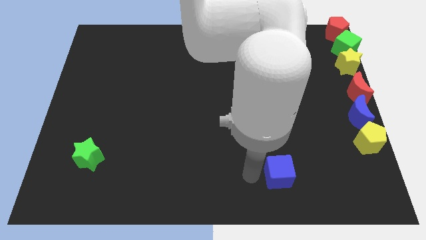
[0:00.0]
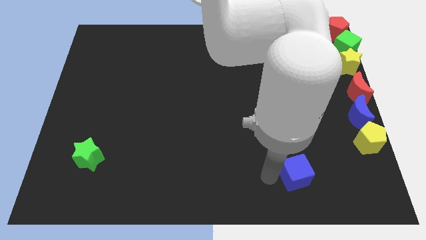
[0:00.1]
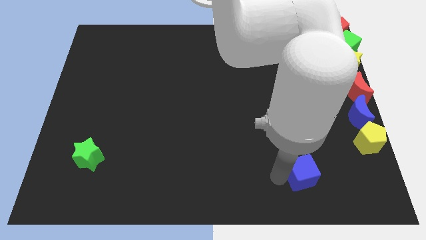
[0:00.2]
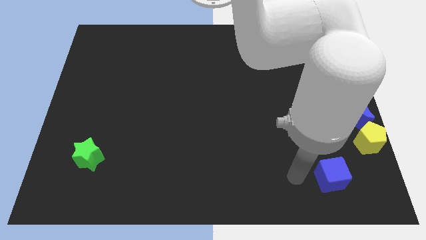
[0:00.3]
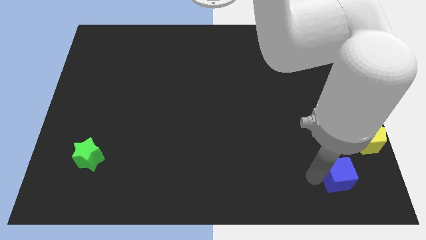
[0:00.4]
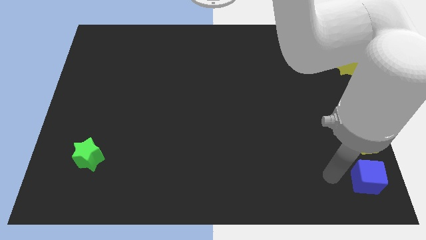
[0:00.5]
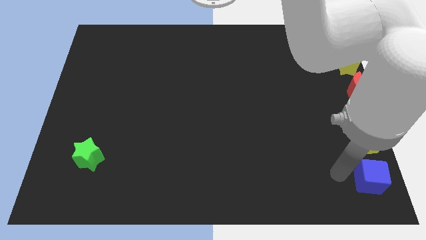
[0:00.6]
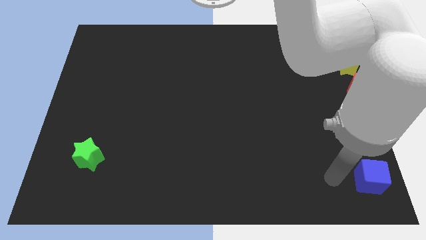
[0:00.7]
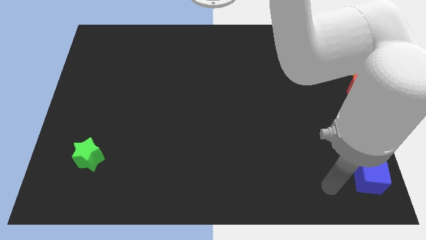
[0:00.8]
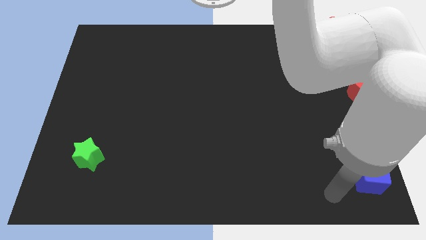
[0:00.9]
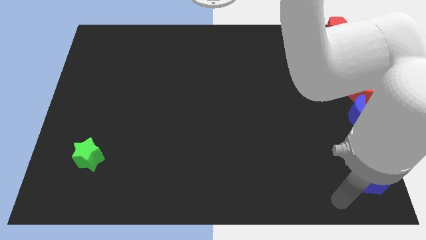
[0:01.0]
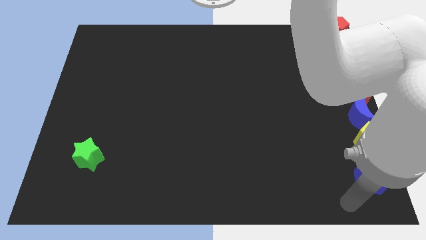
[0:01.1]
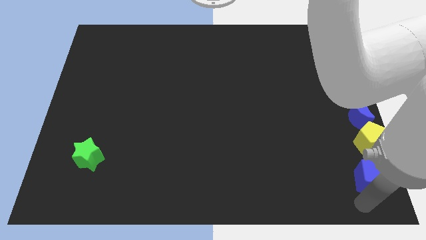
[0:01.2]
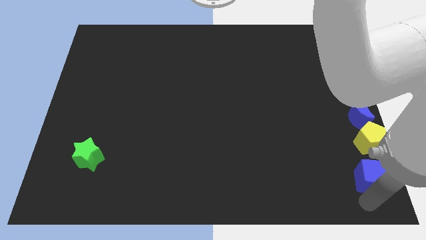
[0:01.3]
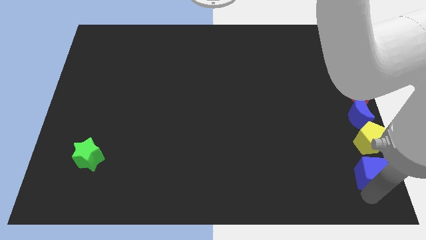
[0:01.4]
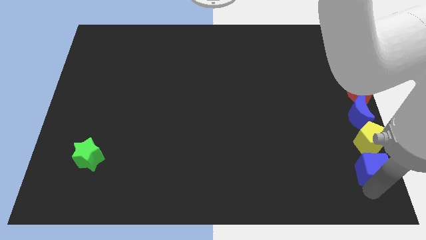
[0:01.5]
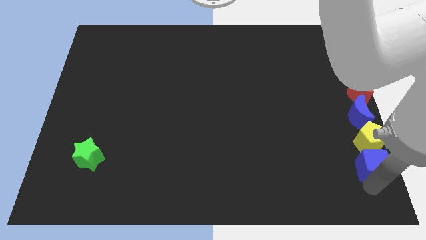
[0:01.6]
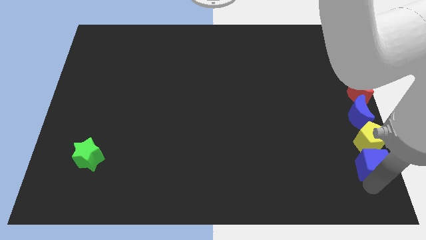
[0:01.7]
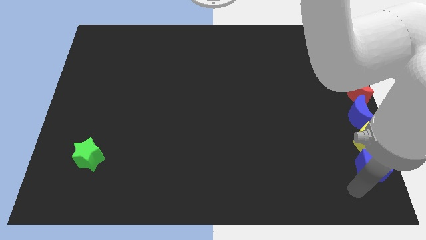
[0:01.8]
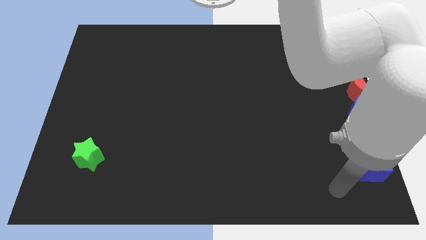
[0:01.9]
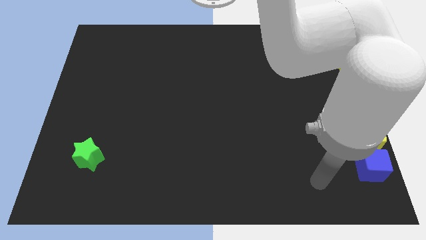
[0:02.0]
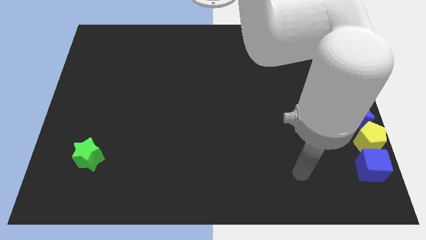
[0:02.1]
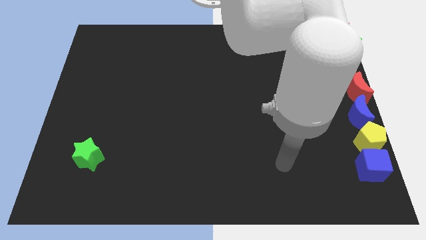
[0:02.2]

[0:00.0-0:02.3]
move the blue cube to the bottom side of the yellow pentagon

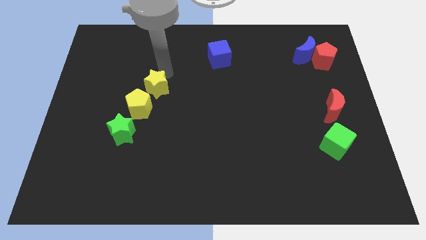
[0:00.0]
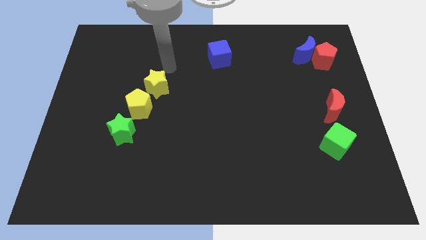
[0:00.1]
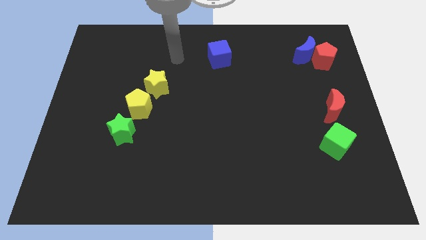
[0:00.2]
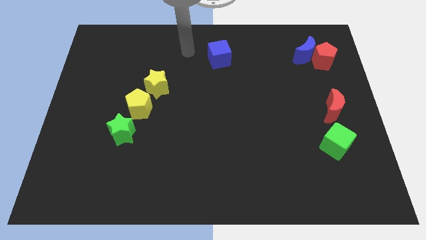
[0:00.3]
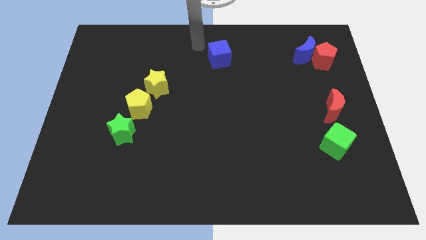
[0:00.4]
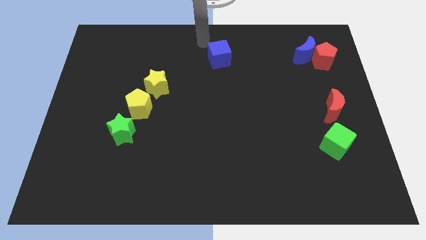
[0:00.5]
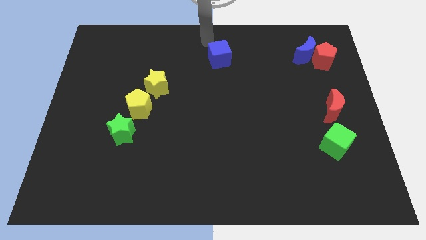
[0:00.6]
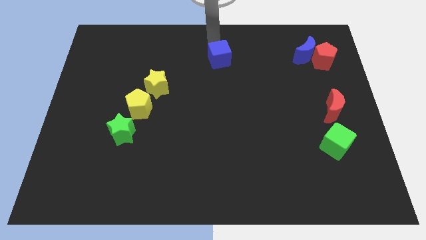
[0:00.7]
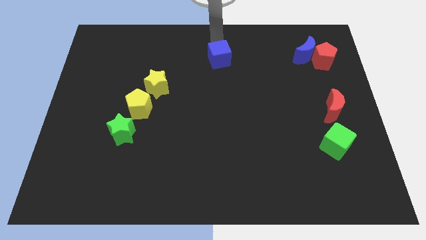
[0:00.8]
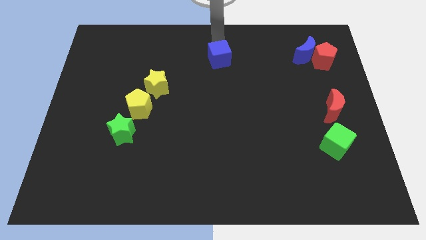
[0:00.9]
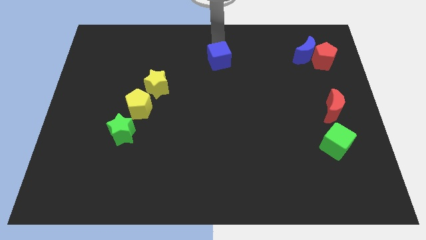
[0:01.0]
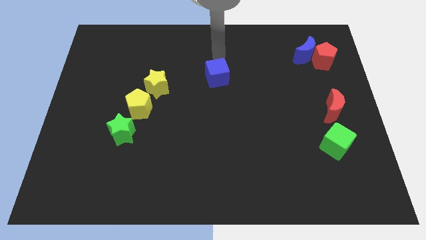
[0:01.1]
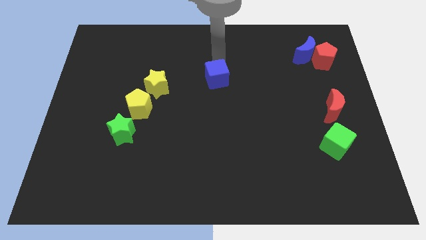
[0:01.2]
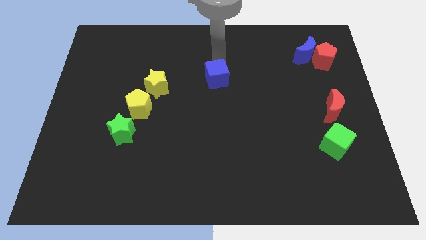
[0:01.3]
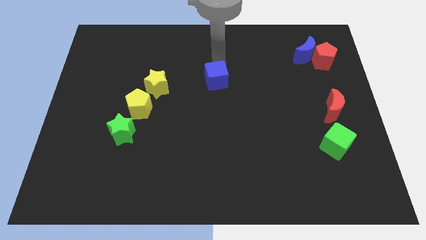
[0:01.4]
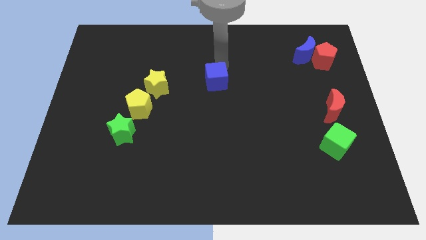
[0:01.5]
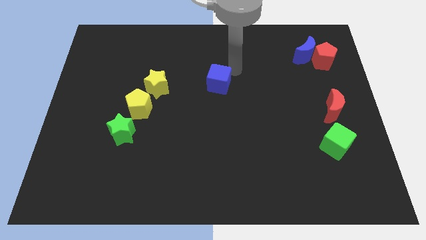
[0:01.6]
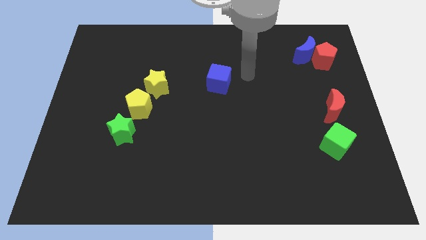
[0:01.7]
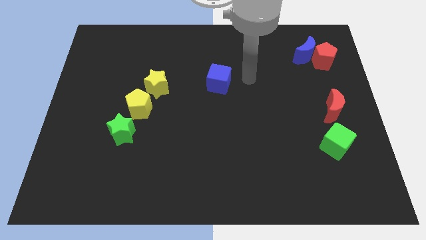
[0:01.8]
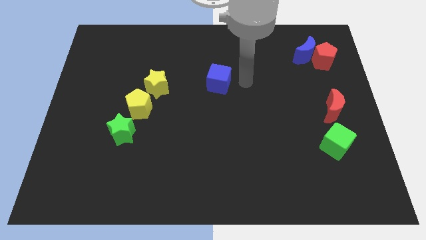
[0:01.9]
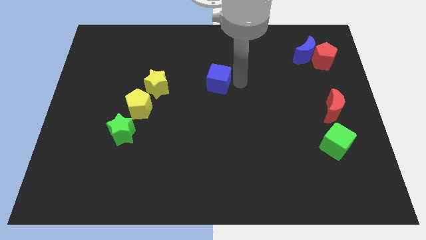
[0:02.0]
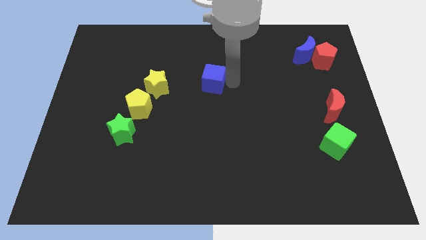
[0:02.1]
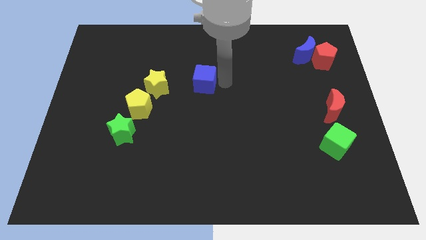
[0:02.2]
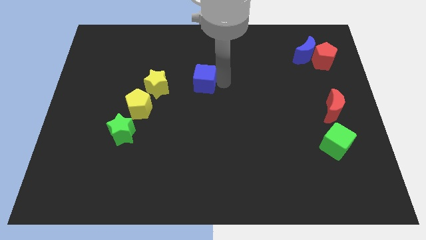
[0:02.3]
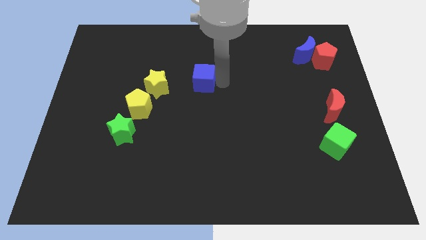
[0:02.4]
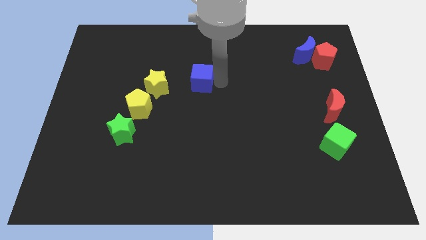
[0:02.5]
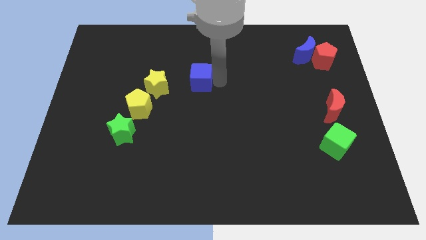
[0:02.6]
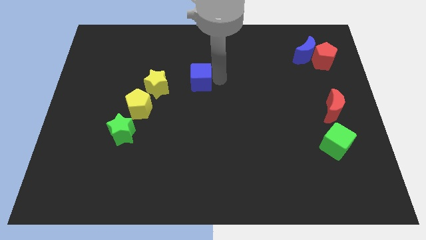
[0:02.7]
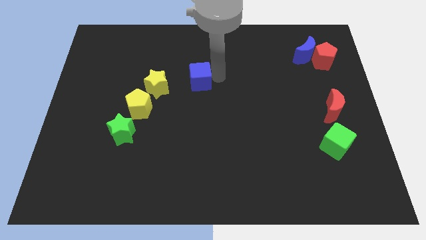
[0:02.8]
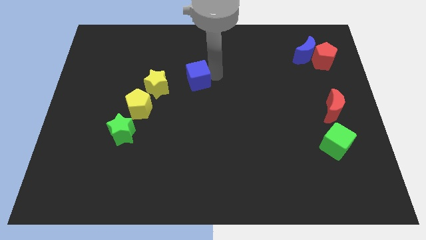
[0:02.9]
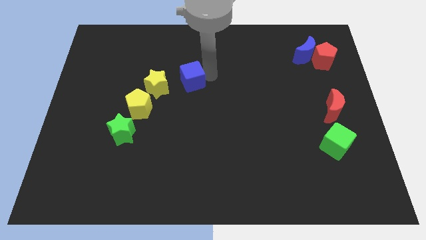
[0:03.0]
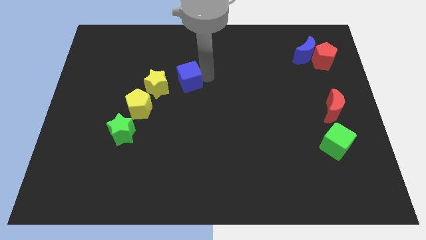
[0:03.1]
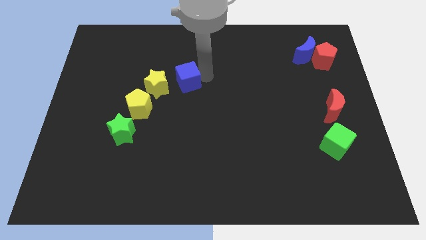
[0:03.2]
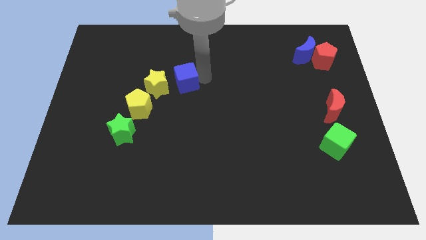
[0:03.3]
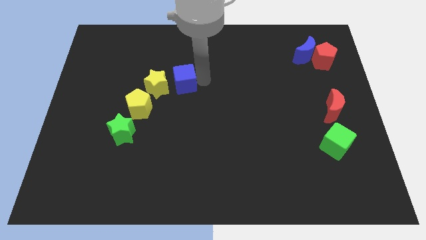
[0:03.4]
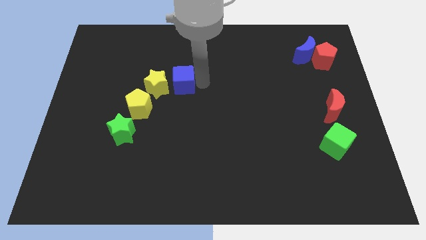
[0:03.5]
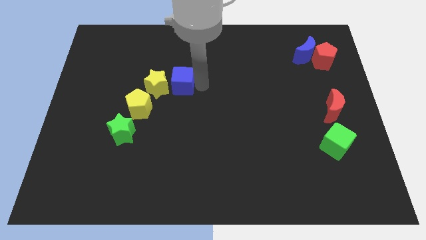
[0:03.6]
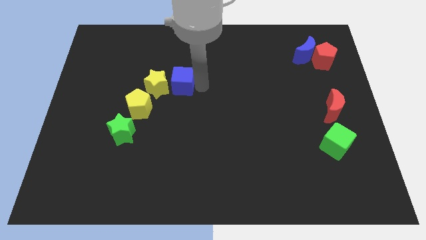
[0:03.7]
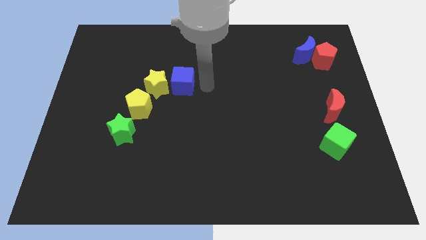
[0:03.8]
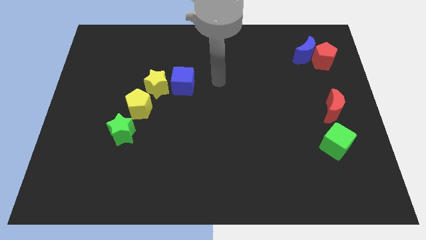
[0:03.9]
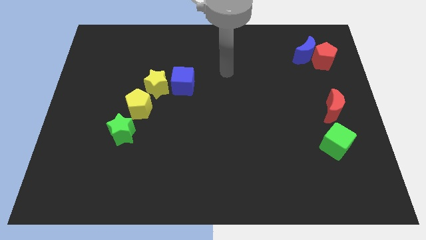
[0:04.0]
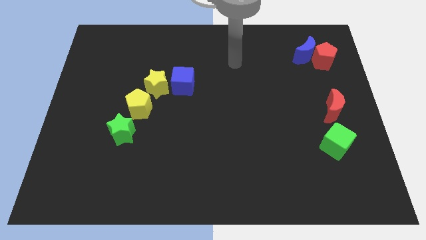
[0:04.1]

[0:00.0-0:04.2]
push the blue cube to the right of the yellow star

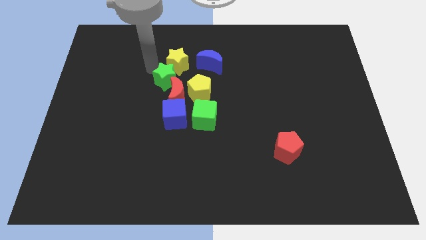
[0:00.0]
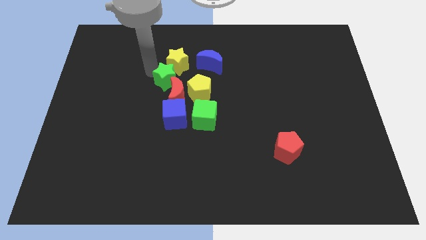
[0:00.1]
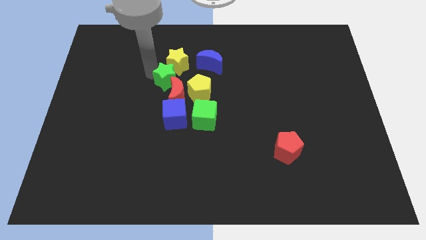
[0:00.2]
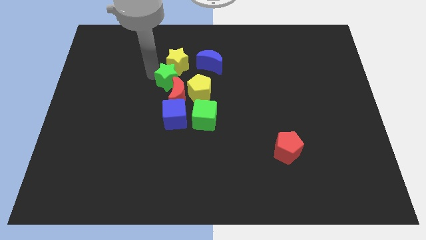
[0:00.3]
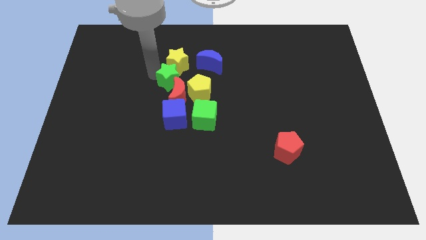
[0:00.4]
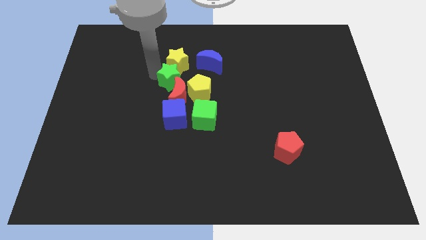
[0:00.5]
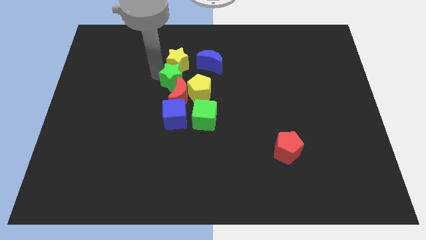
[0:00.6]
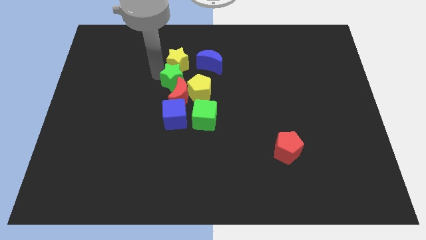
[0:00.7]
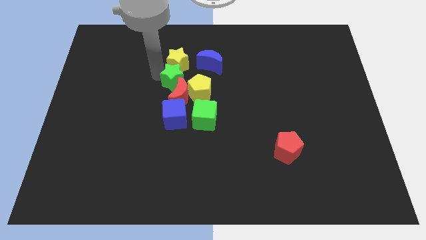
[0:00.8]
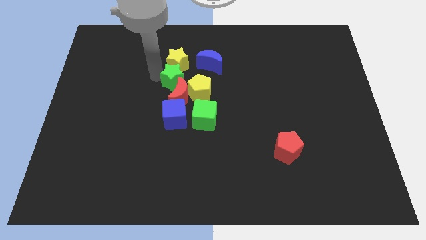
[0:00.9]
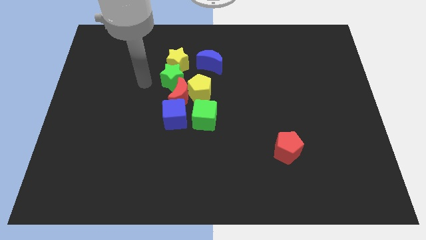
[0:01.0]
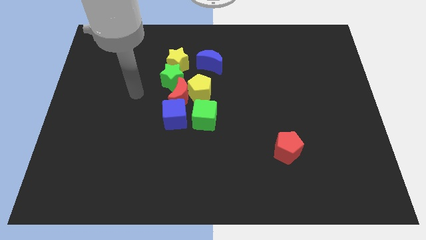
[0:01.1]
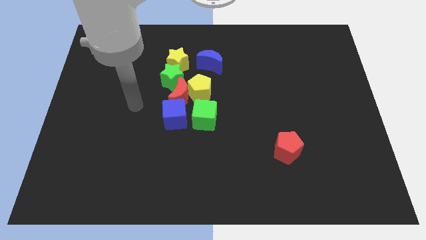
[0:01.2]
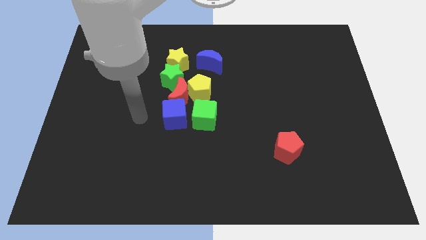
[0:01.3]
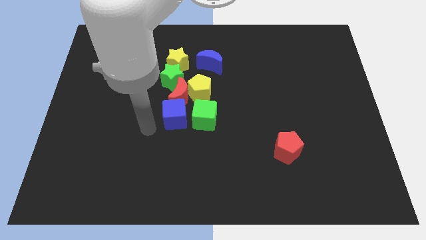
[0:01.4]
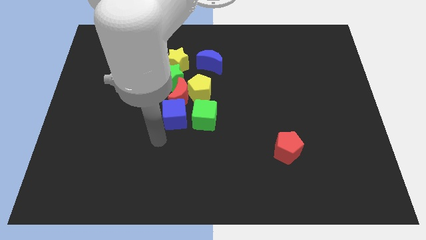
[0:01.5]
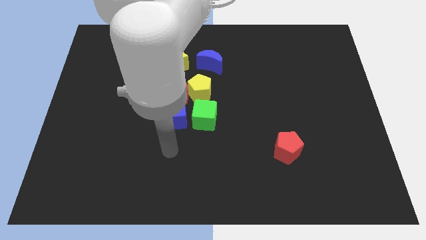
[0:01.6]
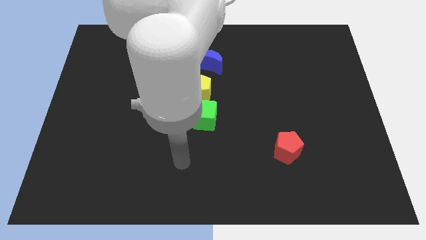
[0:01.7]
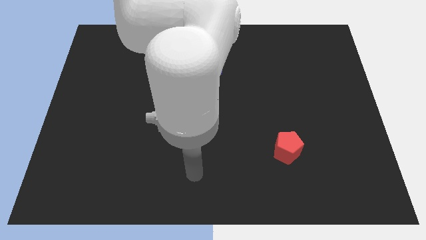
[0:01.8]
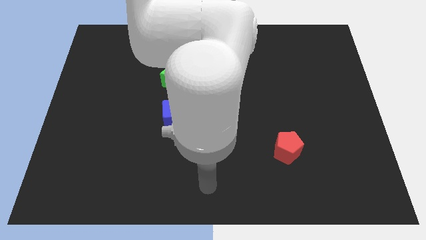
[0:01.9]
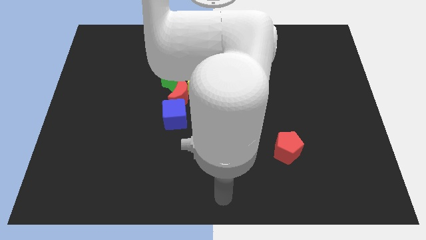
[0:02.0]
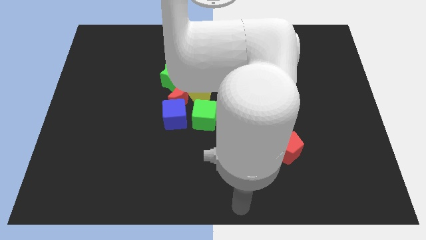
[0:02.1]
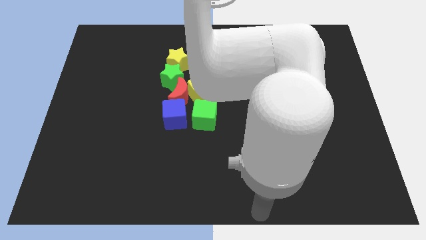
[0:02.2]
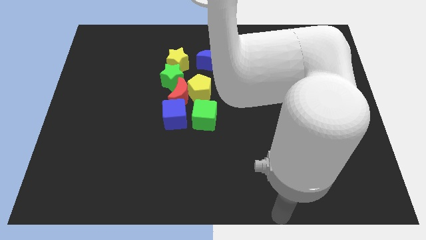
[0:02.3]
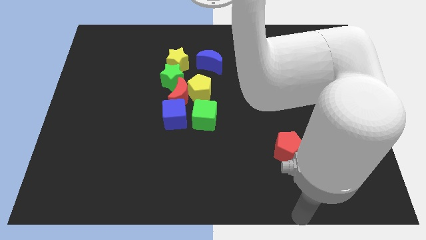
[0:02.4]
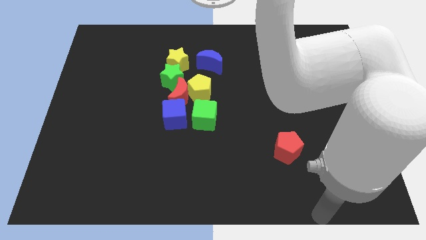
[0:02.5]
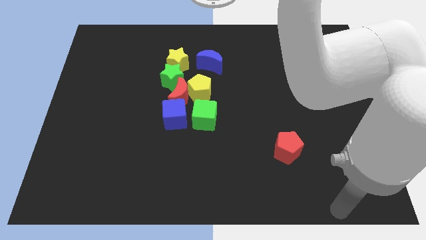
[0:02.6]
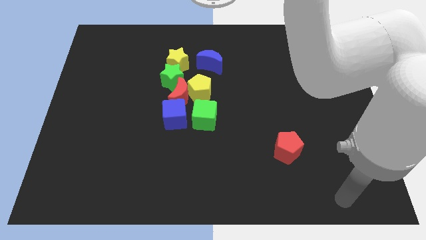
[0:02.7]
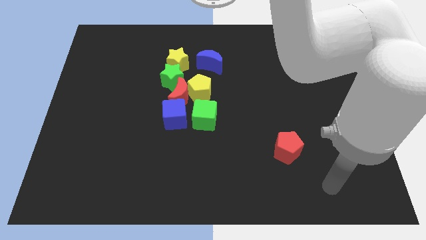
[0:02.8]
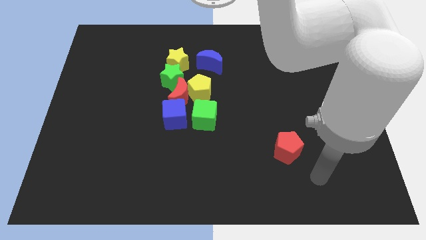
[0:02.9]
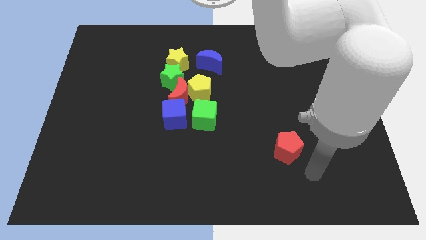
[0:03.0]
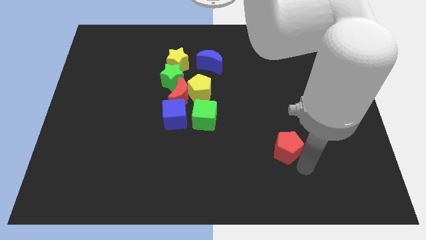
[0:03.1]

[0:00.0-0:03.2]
push the green star slightly to the right and move away from it
